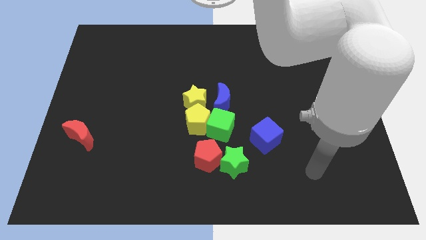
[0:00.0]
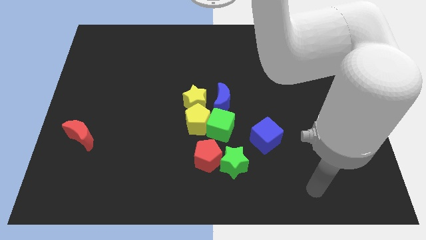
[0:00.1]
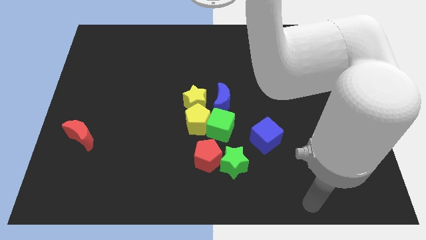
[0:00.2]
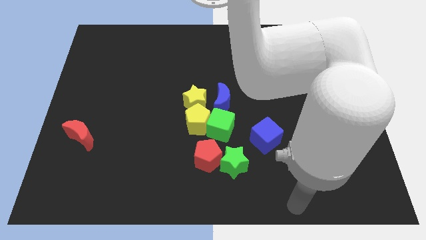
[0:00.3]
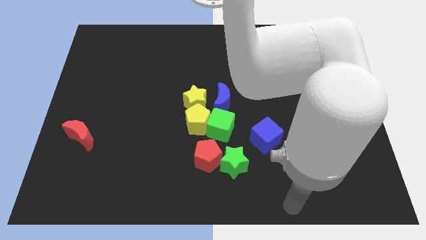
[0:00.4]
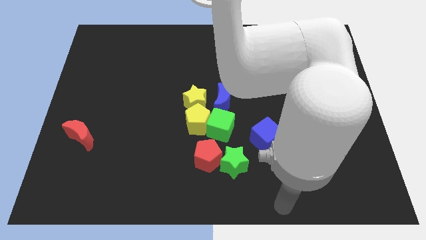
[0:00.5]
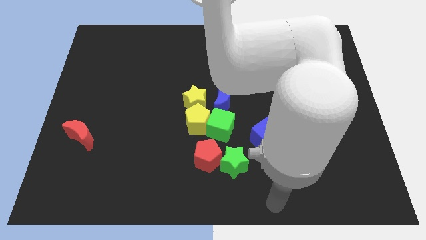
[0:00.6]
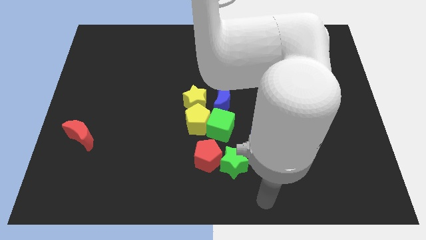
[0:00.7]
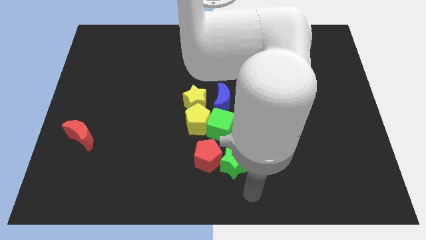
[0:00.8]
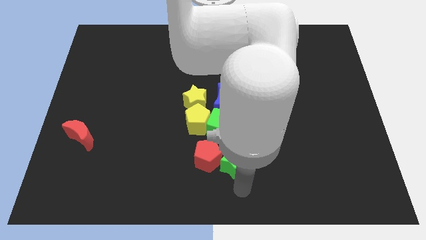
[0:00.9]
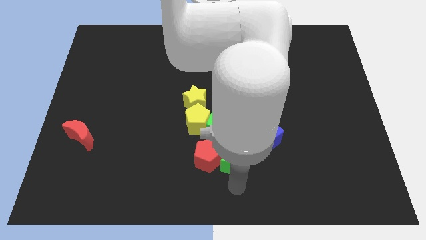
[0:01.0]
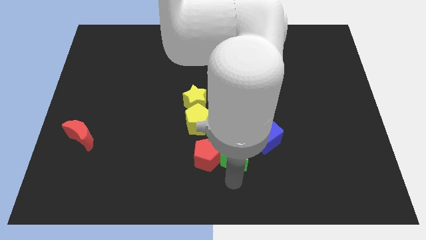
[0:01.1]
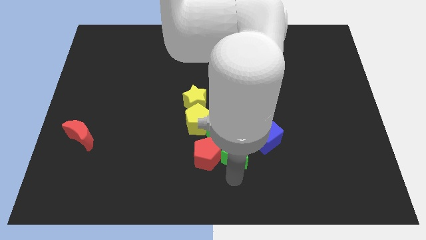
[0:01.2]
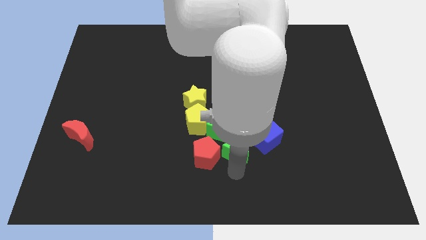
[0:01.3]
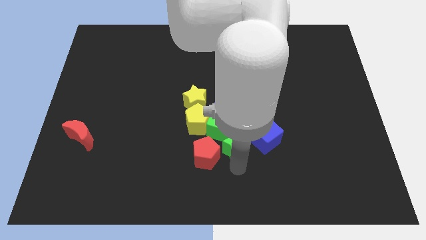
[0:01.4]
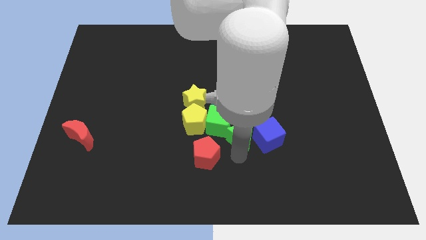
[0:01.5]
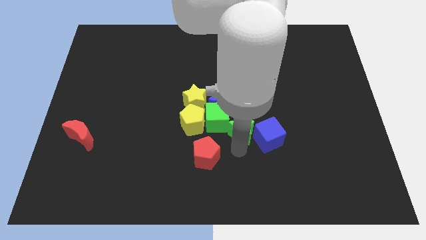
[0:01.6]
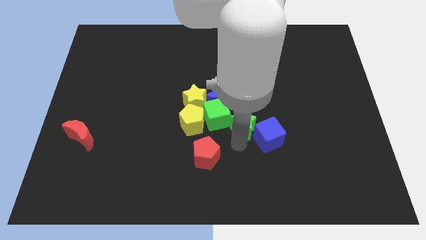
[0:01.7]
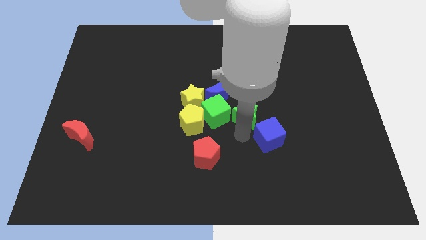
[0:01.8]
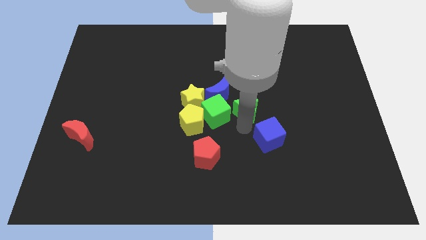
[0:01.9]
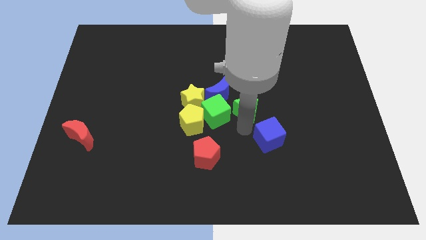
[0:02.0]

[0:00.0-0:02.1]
move the green star to the right of the green cube

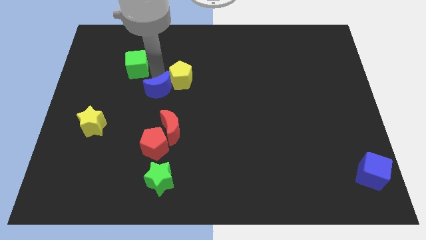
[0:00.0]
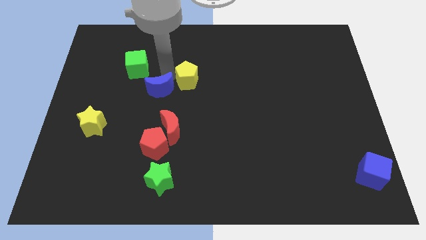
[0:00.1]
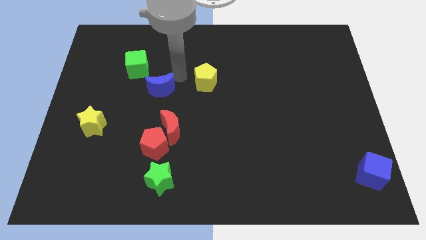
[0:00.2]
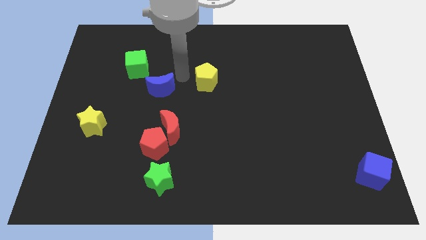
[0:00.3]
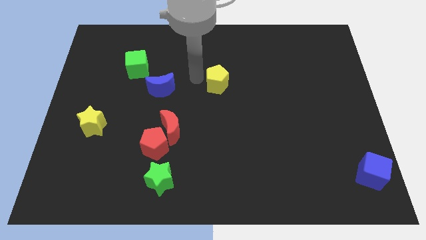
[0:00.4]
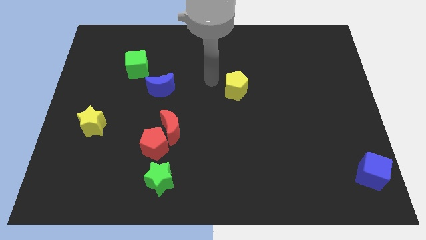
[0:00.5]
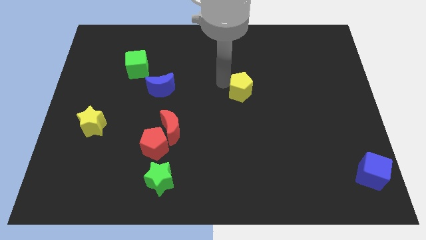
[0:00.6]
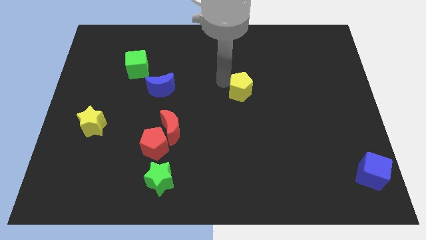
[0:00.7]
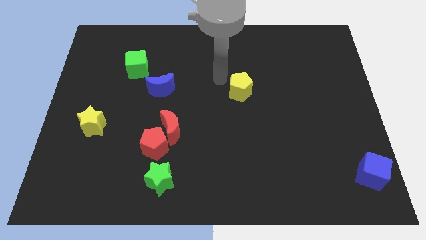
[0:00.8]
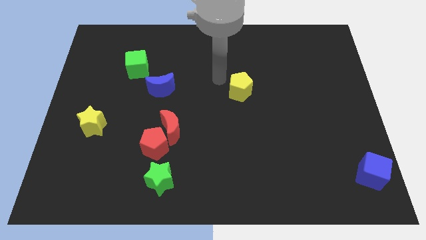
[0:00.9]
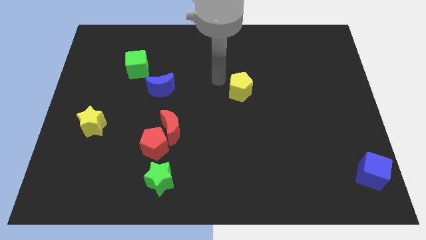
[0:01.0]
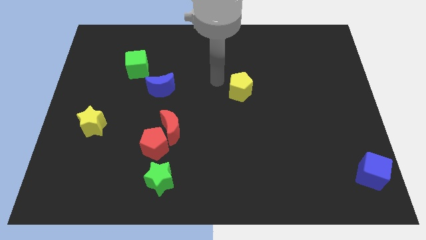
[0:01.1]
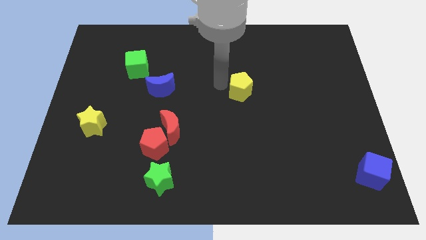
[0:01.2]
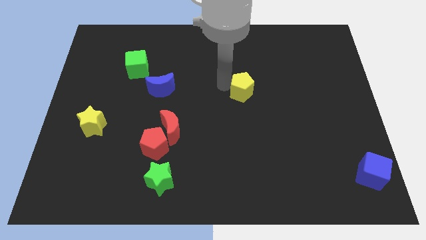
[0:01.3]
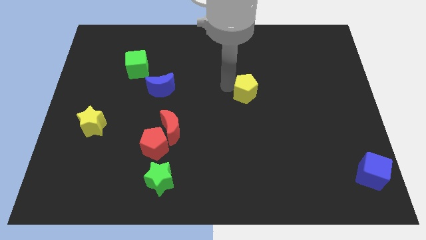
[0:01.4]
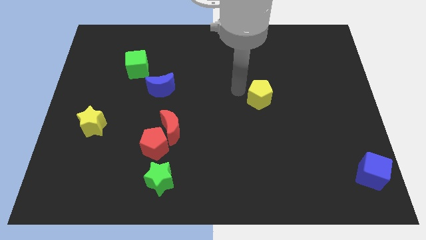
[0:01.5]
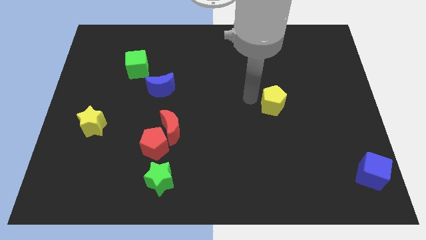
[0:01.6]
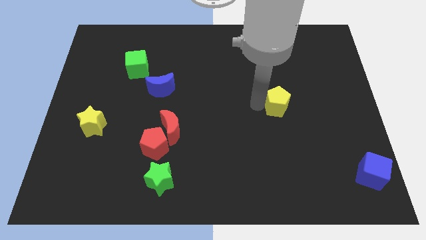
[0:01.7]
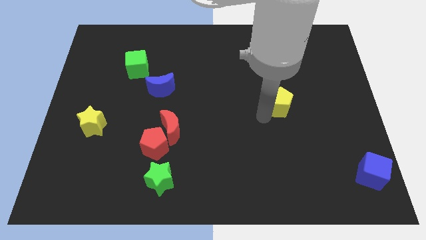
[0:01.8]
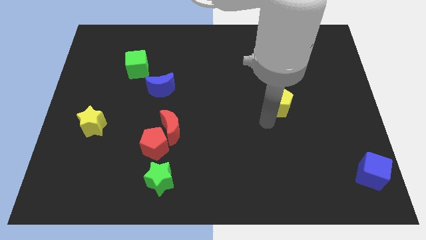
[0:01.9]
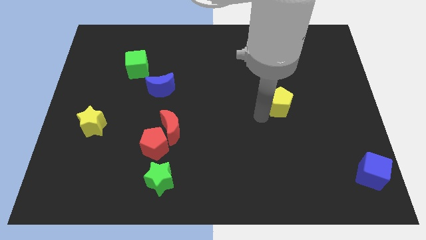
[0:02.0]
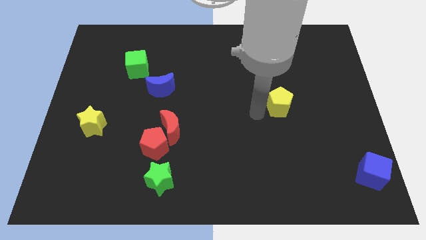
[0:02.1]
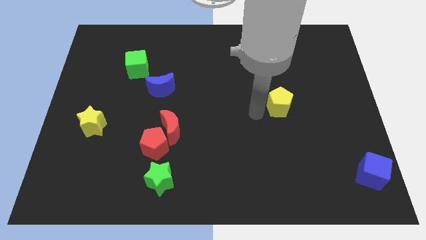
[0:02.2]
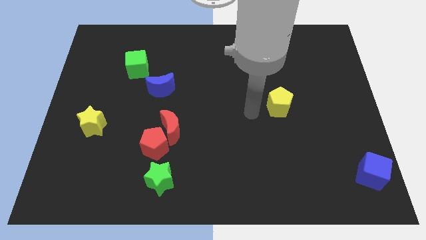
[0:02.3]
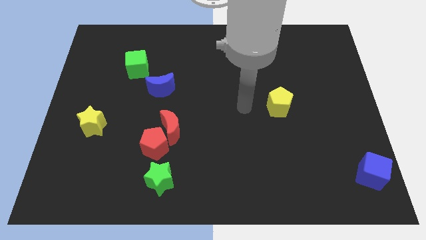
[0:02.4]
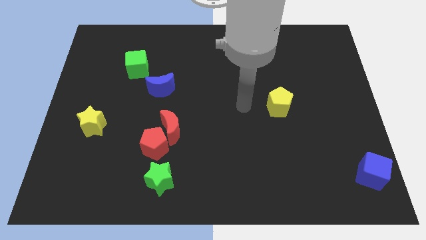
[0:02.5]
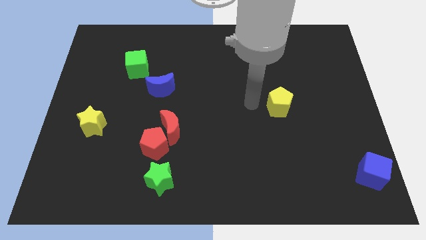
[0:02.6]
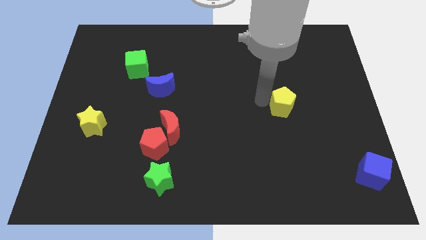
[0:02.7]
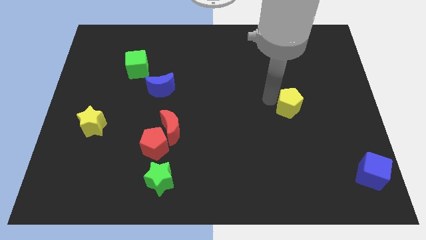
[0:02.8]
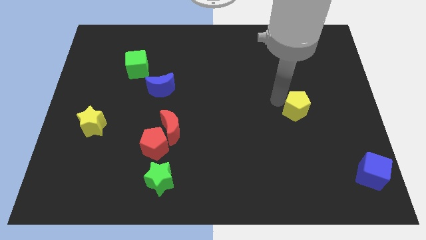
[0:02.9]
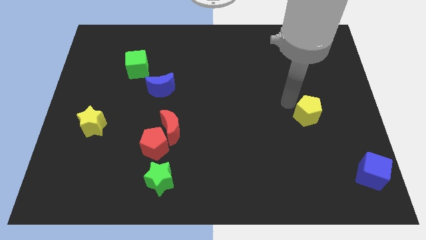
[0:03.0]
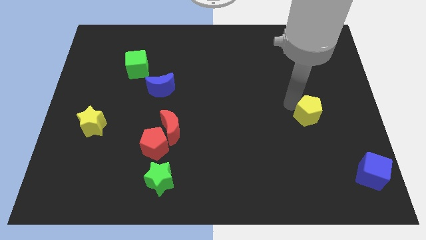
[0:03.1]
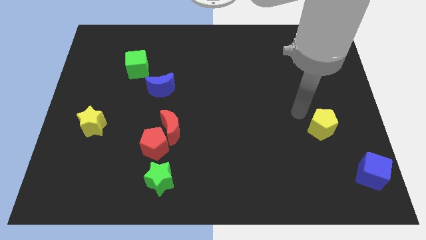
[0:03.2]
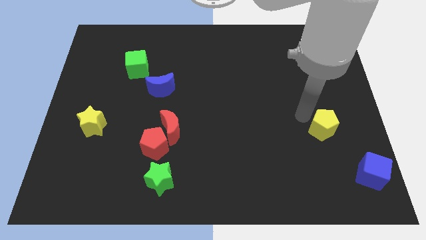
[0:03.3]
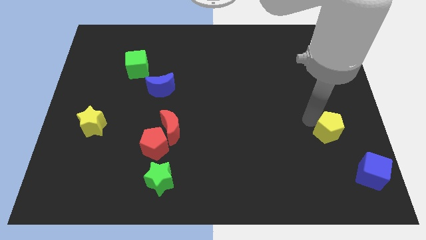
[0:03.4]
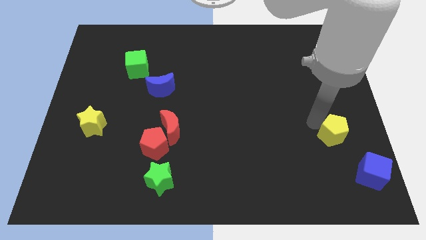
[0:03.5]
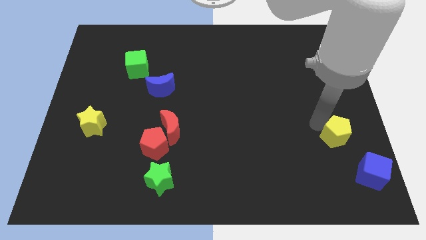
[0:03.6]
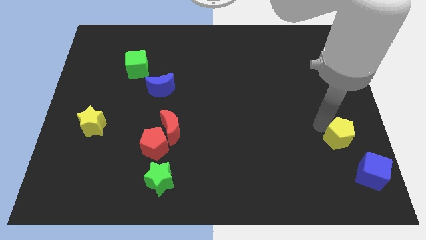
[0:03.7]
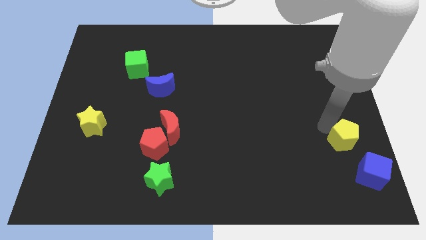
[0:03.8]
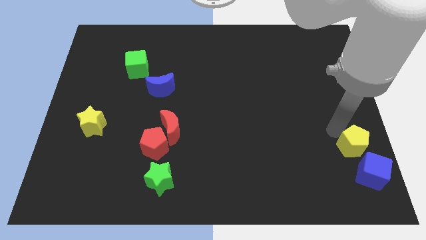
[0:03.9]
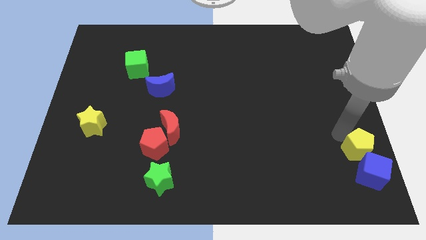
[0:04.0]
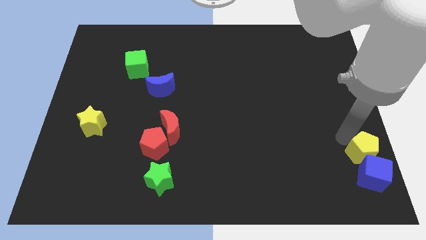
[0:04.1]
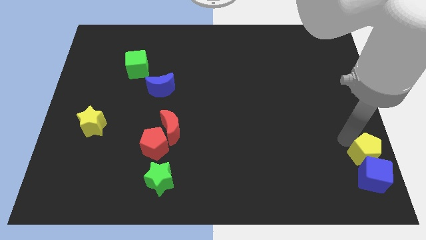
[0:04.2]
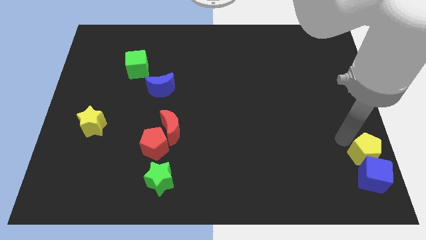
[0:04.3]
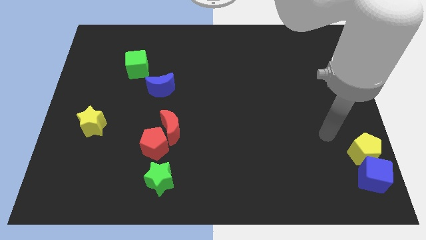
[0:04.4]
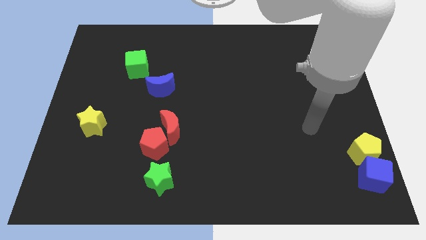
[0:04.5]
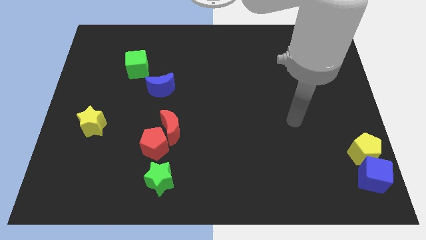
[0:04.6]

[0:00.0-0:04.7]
drag the yellow pentagon to the top of blue cube

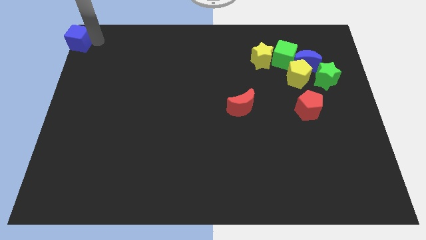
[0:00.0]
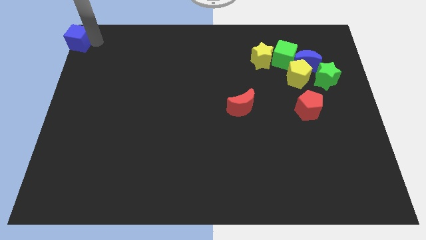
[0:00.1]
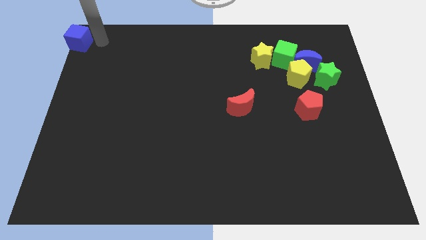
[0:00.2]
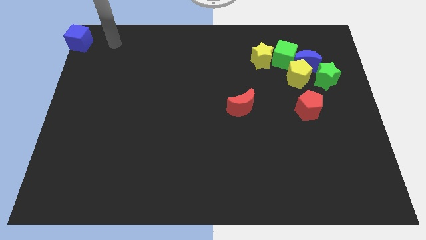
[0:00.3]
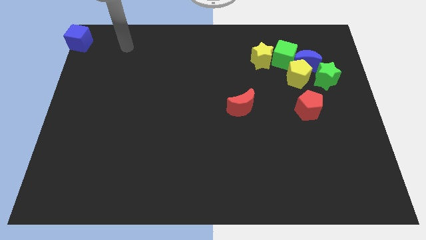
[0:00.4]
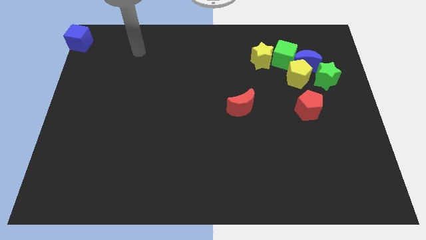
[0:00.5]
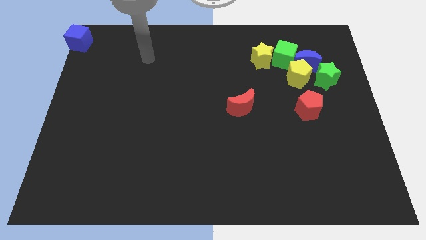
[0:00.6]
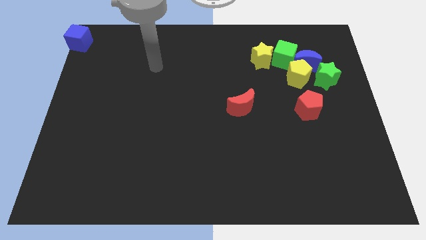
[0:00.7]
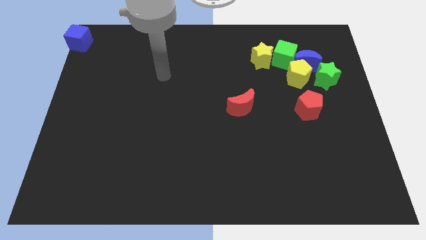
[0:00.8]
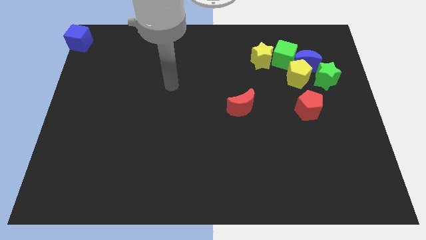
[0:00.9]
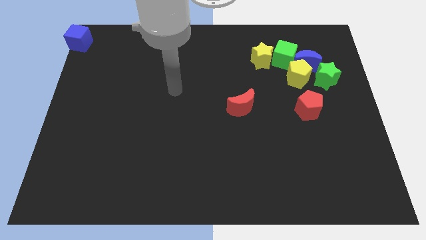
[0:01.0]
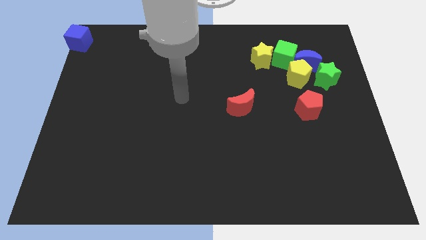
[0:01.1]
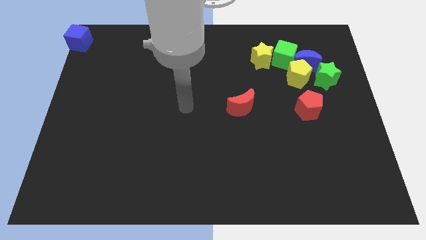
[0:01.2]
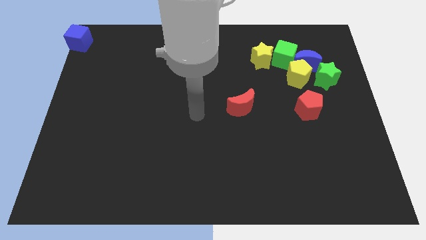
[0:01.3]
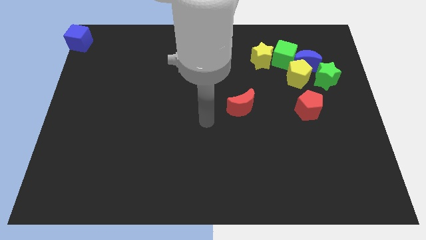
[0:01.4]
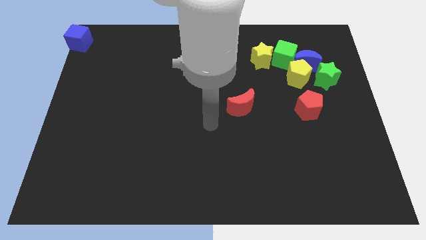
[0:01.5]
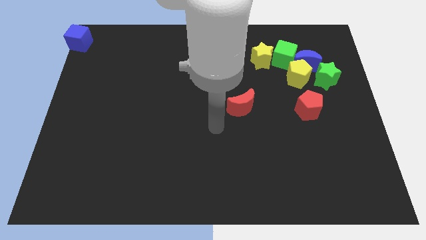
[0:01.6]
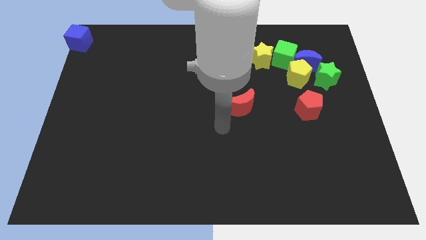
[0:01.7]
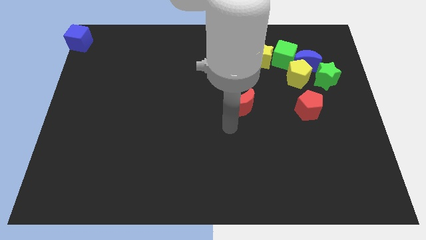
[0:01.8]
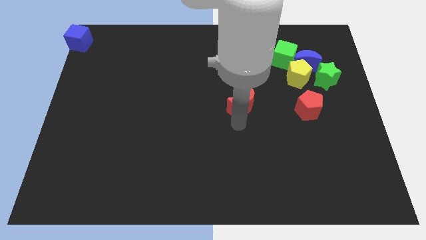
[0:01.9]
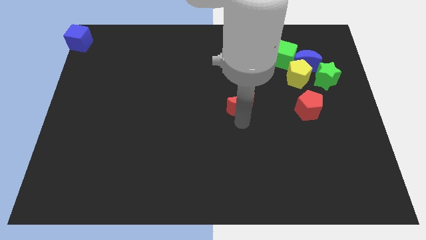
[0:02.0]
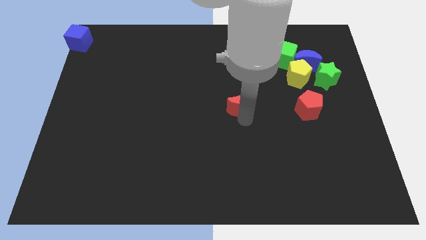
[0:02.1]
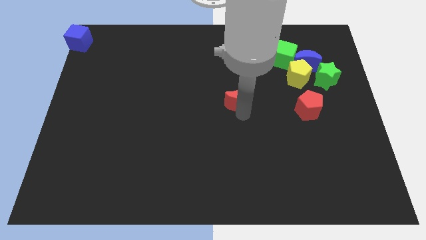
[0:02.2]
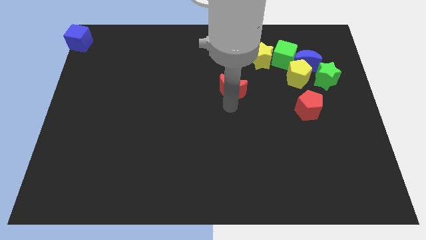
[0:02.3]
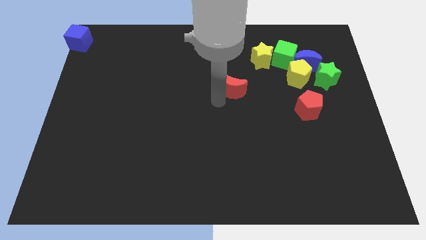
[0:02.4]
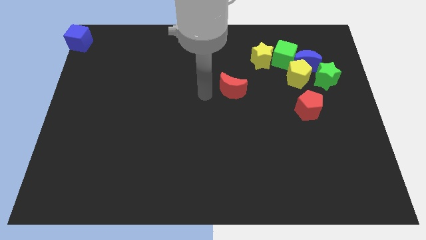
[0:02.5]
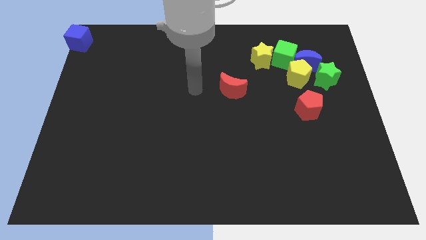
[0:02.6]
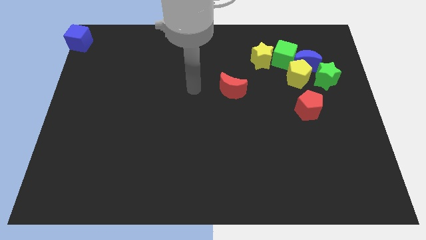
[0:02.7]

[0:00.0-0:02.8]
move the arm away from the blue cube
